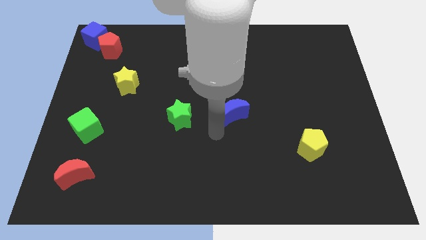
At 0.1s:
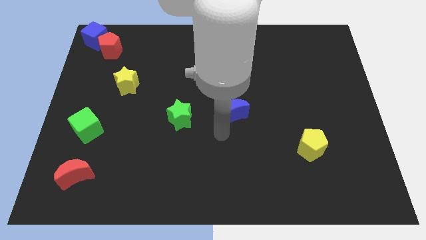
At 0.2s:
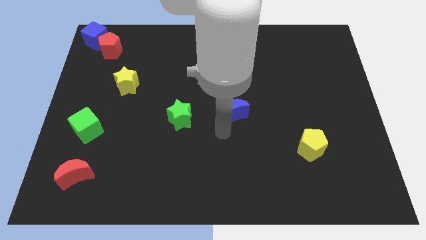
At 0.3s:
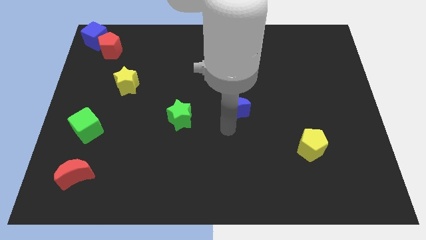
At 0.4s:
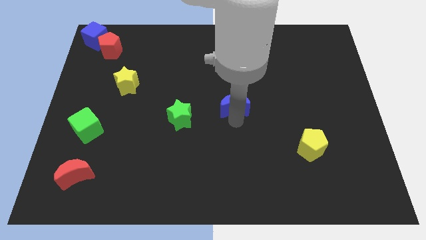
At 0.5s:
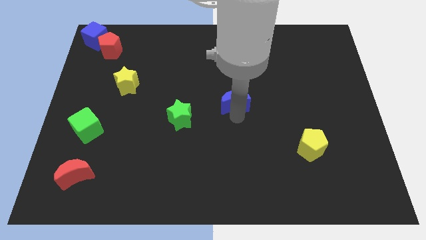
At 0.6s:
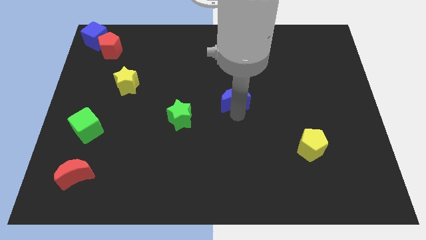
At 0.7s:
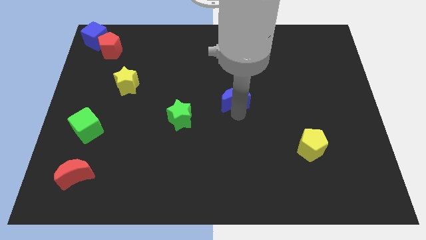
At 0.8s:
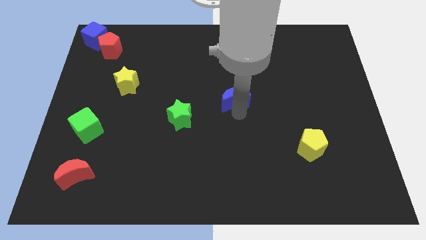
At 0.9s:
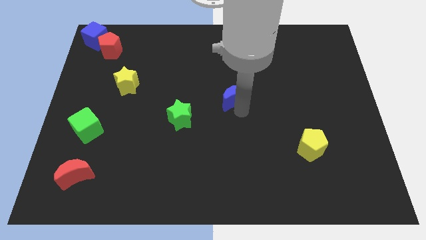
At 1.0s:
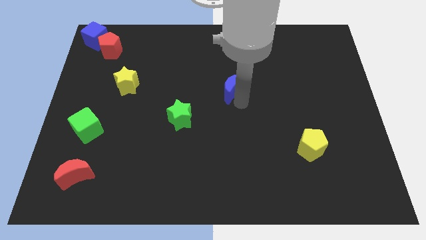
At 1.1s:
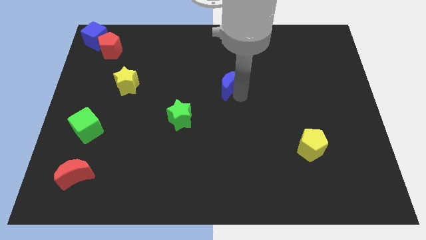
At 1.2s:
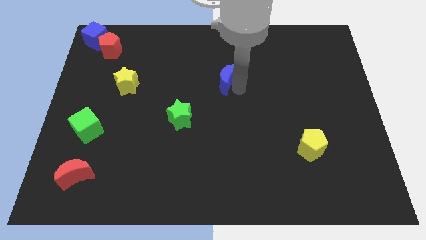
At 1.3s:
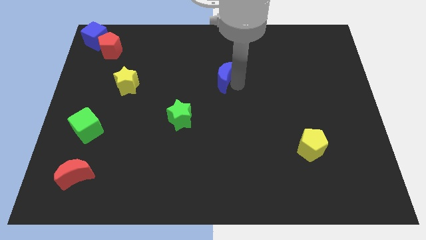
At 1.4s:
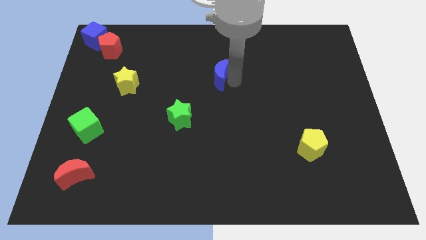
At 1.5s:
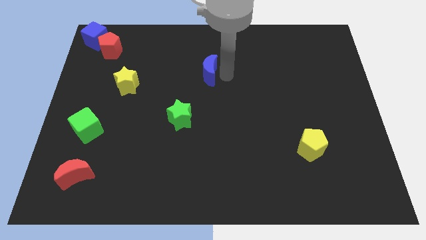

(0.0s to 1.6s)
push the blue crescent to the top of the board

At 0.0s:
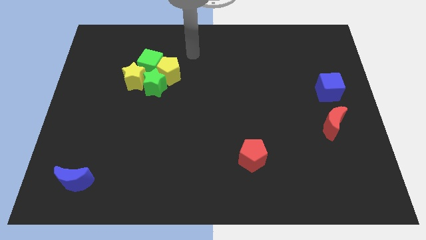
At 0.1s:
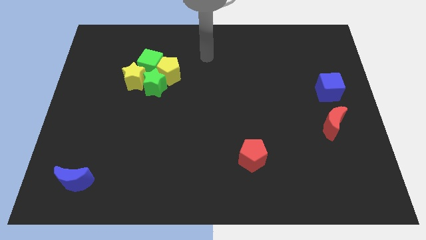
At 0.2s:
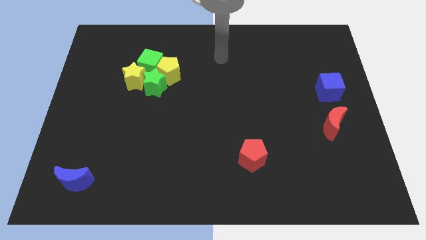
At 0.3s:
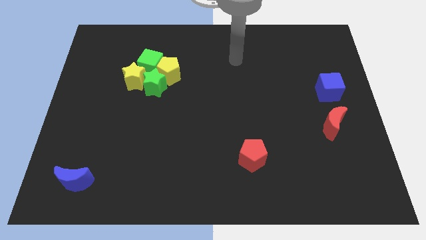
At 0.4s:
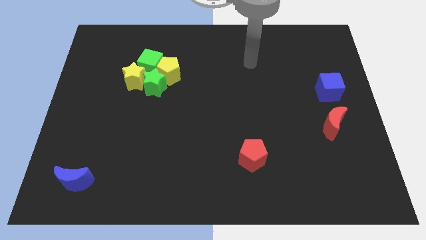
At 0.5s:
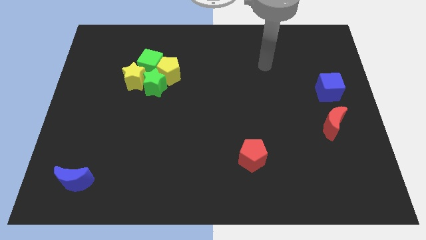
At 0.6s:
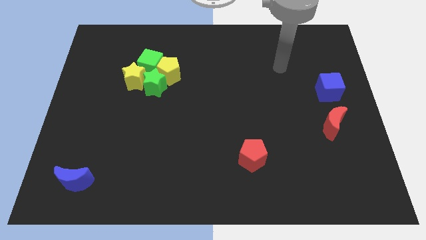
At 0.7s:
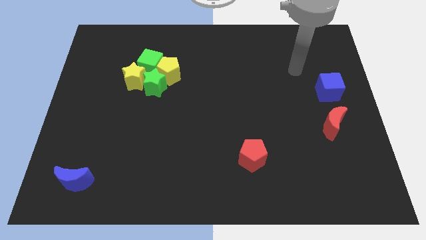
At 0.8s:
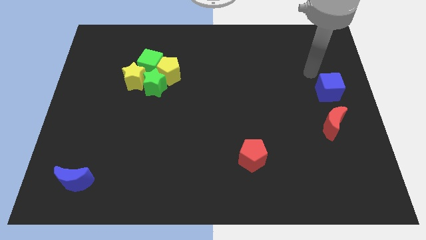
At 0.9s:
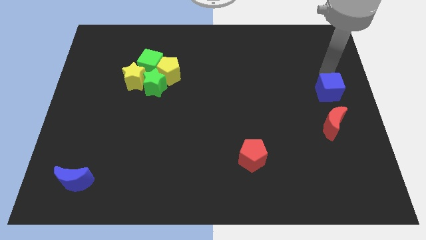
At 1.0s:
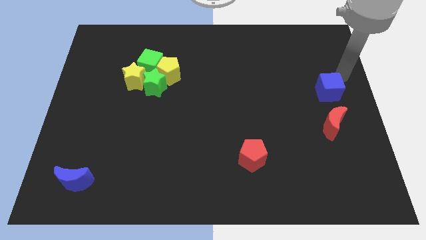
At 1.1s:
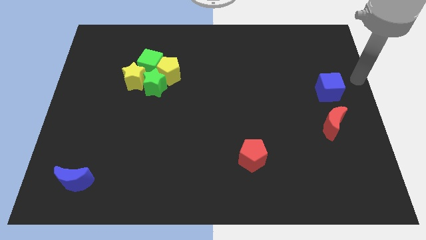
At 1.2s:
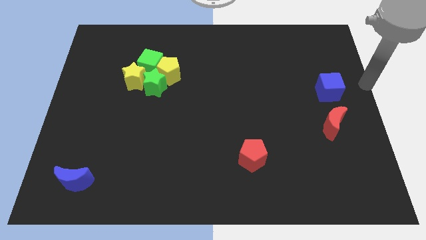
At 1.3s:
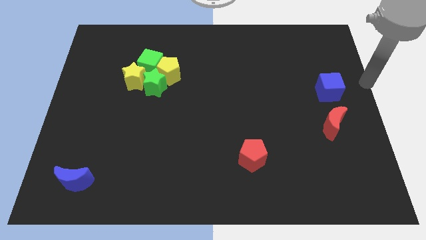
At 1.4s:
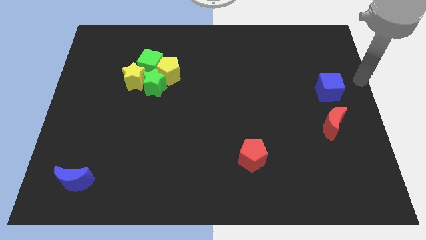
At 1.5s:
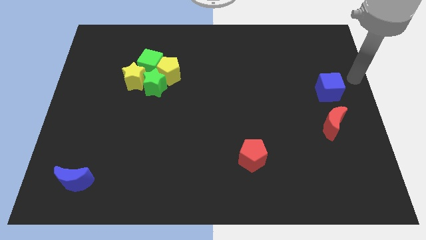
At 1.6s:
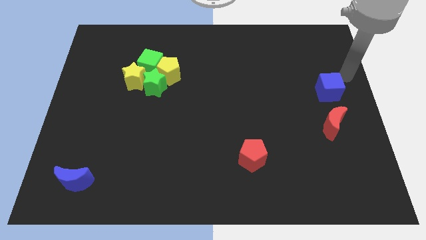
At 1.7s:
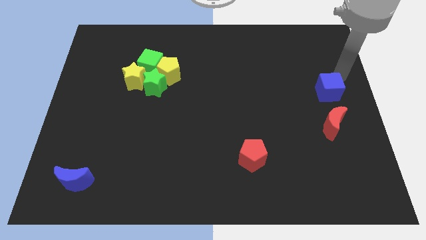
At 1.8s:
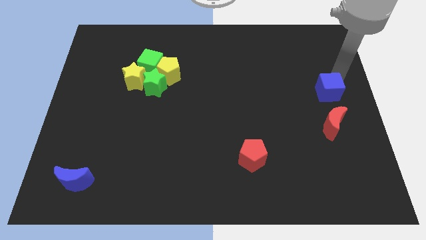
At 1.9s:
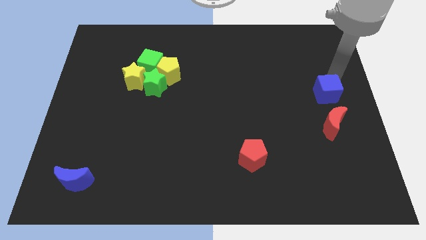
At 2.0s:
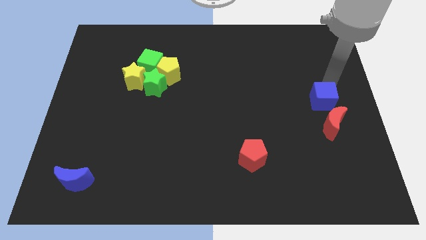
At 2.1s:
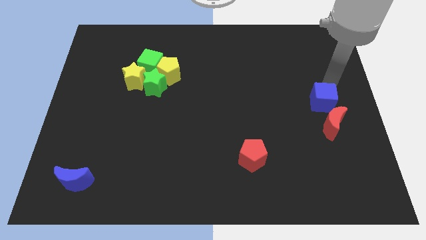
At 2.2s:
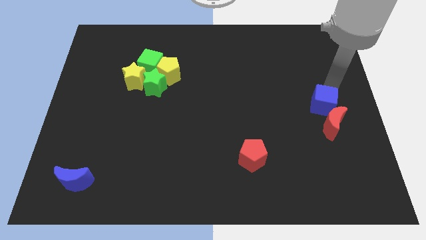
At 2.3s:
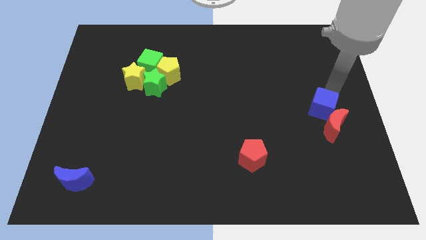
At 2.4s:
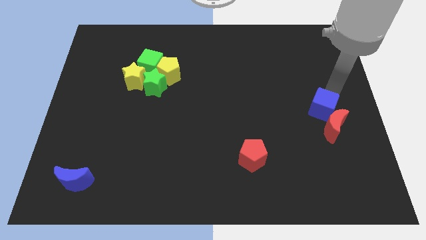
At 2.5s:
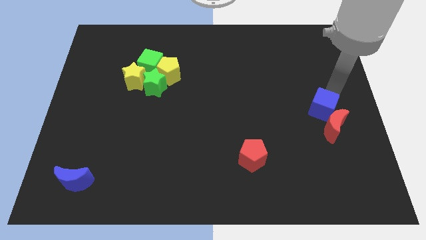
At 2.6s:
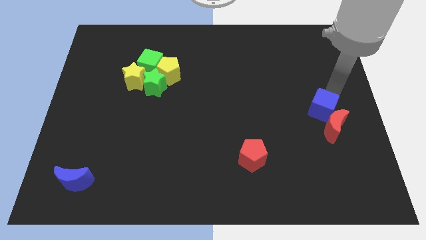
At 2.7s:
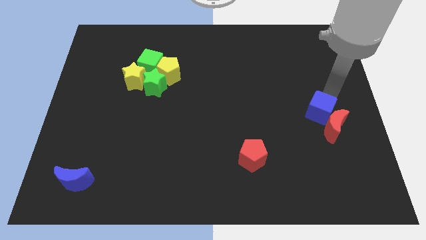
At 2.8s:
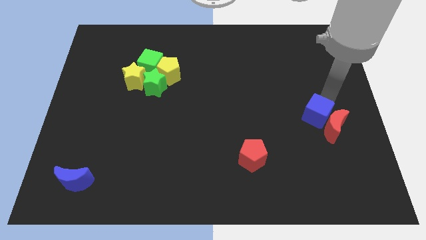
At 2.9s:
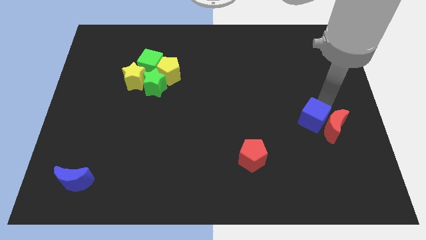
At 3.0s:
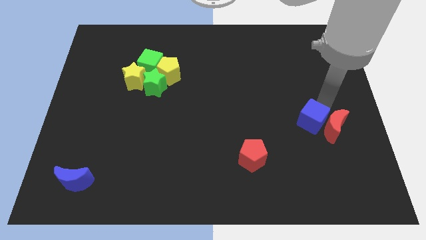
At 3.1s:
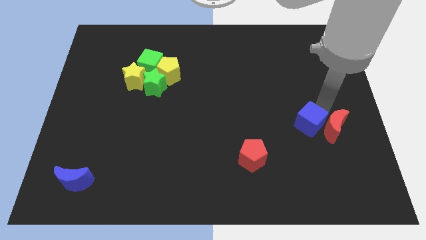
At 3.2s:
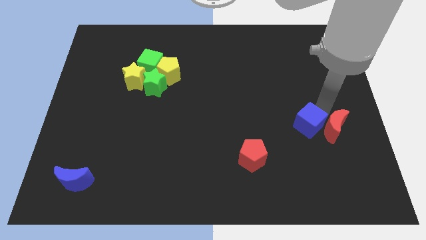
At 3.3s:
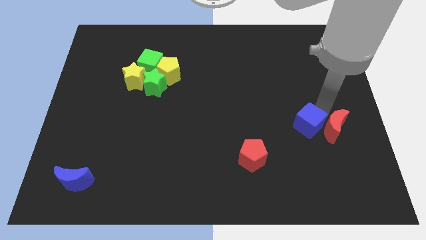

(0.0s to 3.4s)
move the blue moon to the left of red moon

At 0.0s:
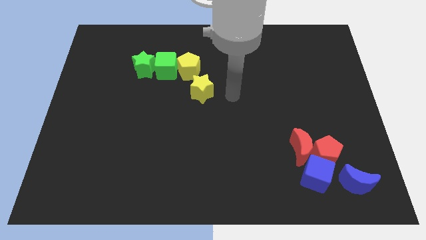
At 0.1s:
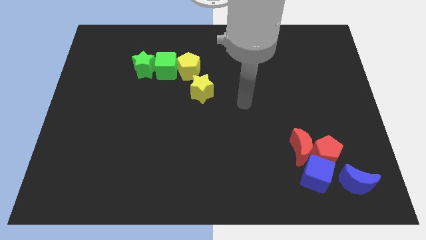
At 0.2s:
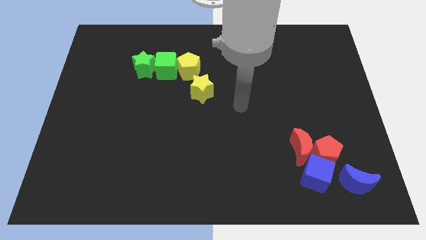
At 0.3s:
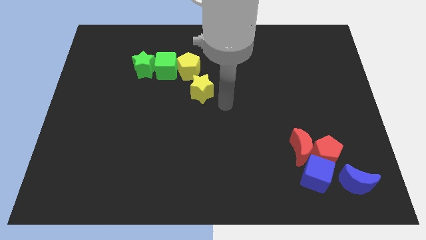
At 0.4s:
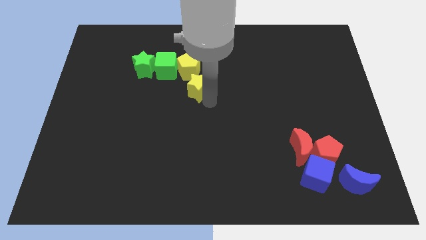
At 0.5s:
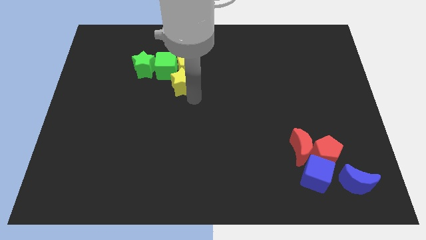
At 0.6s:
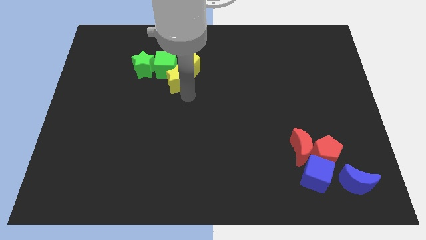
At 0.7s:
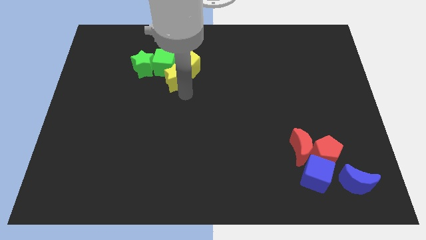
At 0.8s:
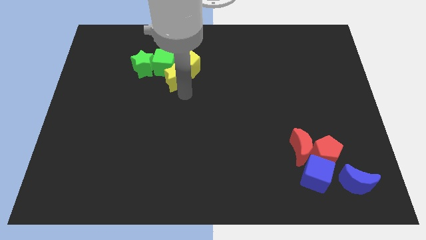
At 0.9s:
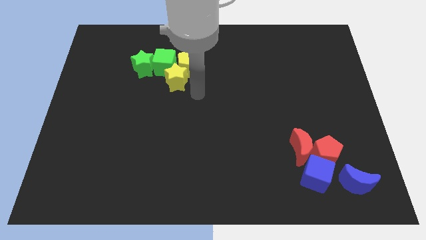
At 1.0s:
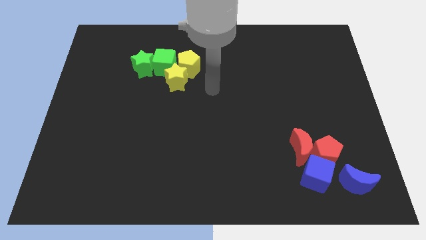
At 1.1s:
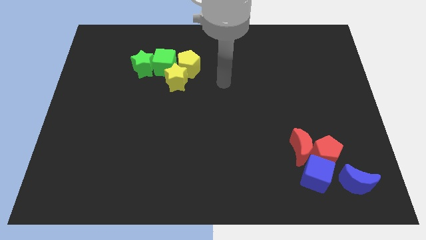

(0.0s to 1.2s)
slide the yellow star into the group of blocks

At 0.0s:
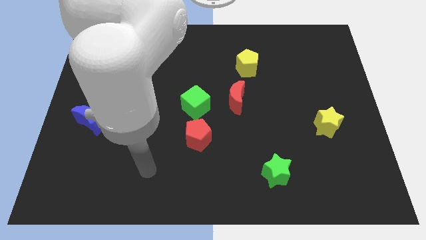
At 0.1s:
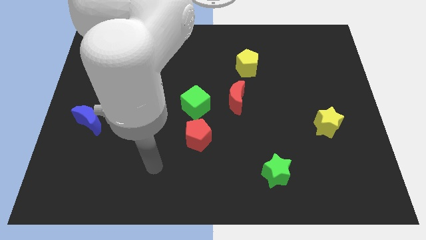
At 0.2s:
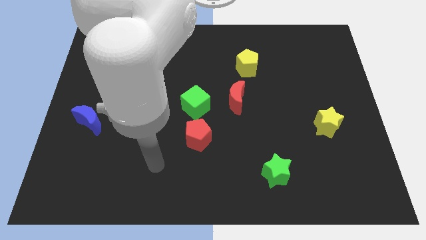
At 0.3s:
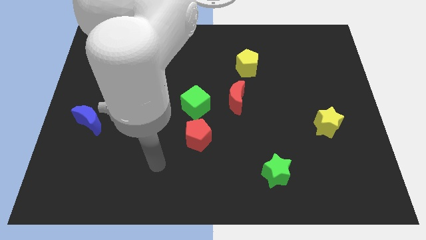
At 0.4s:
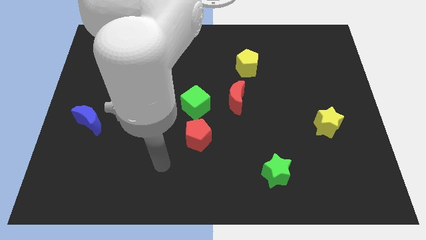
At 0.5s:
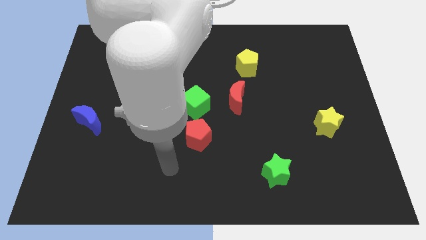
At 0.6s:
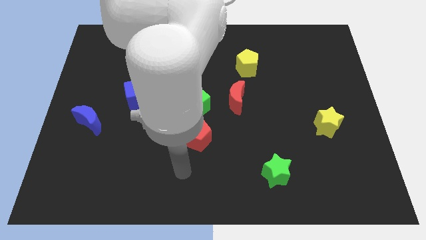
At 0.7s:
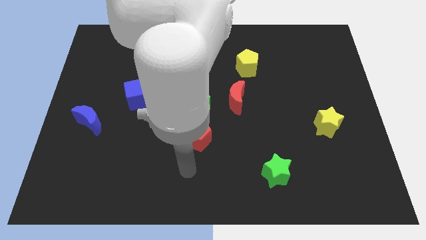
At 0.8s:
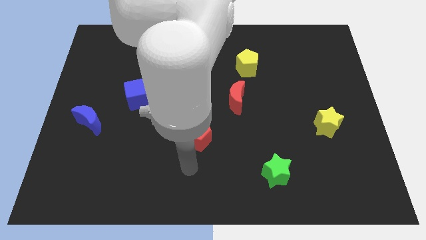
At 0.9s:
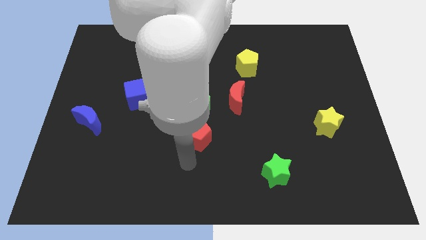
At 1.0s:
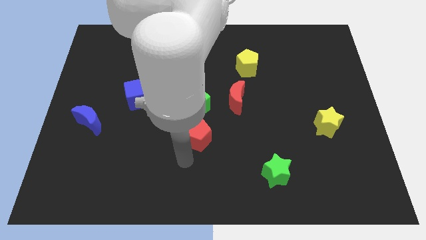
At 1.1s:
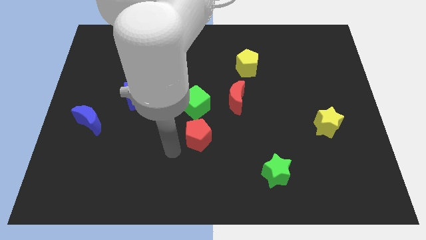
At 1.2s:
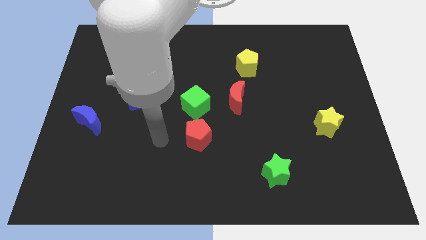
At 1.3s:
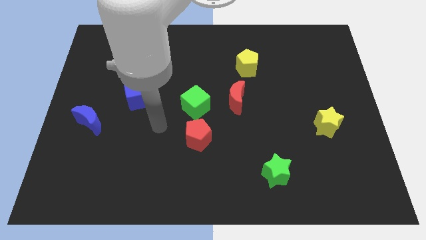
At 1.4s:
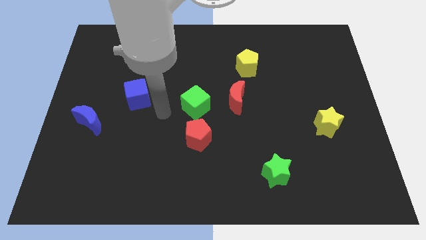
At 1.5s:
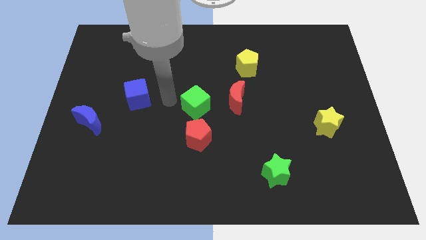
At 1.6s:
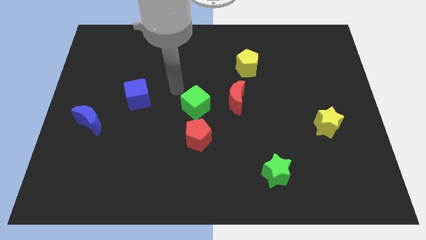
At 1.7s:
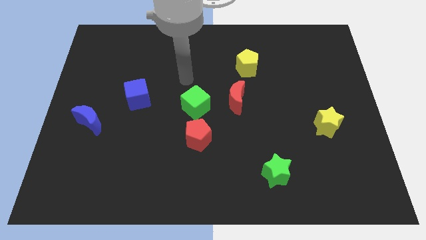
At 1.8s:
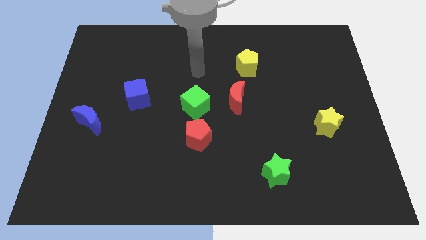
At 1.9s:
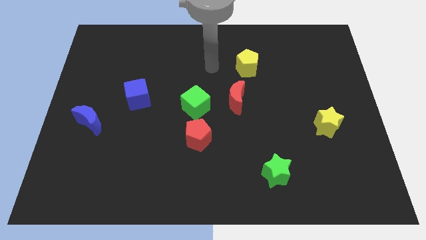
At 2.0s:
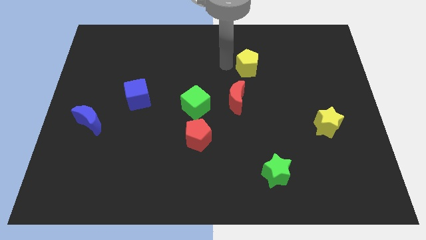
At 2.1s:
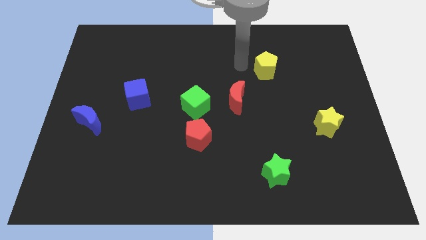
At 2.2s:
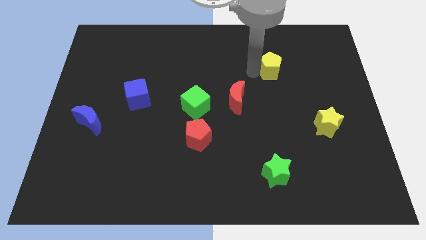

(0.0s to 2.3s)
move your arm into the yellow pentagon

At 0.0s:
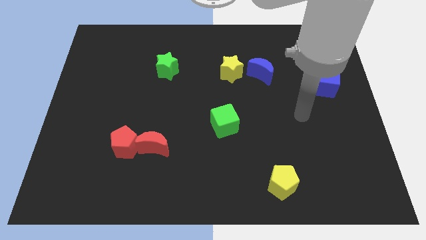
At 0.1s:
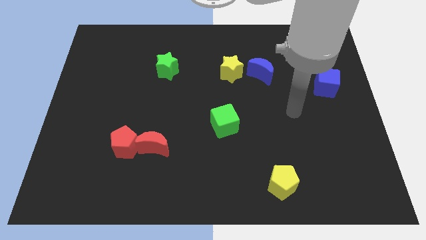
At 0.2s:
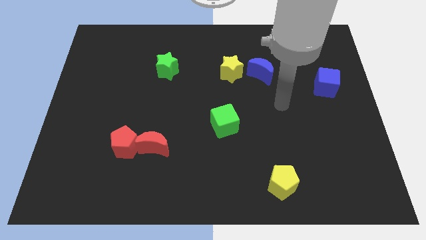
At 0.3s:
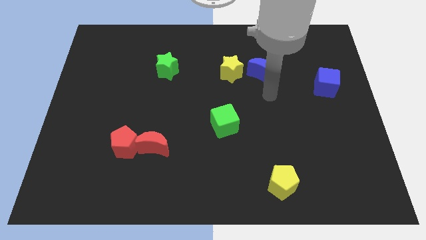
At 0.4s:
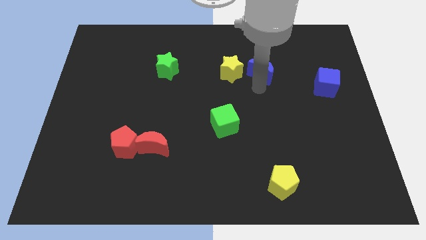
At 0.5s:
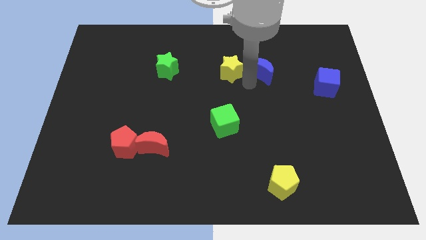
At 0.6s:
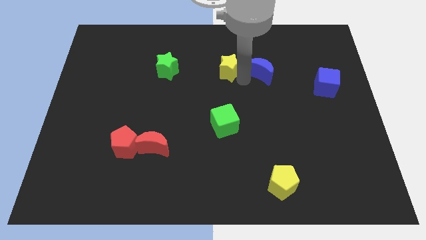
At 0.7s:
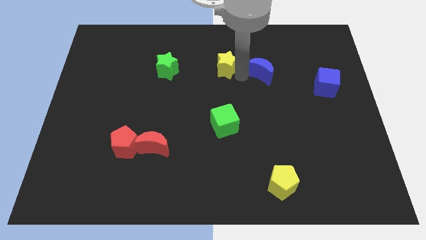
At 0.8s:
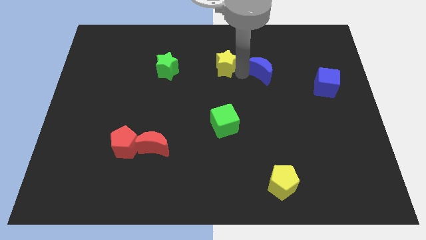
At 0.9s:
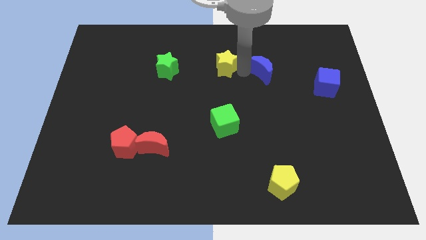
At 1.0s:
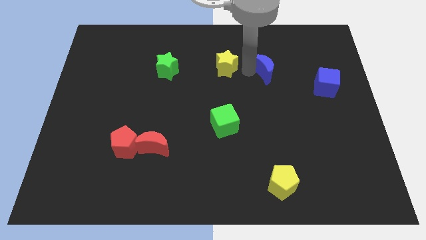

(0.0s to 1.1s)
separate yellow star and blue moon
